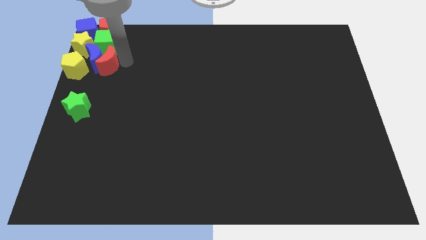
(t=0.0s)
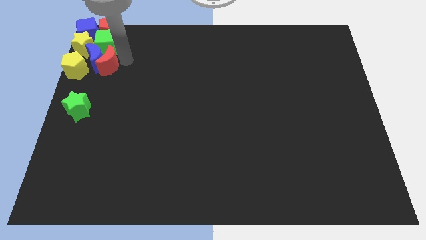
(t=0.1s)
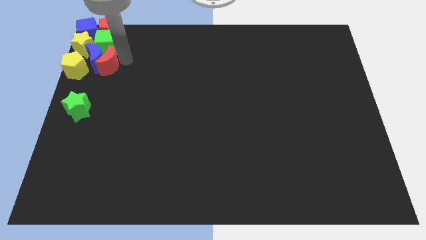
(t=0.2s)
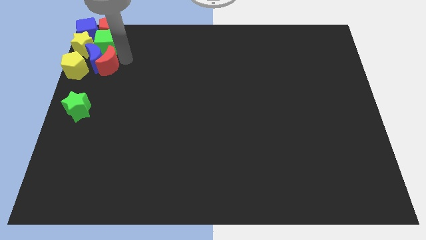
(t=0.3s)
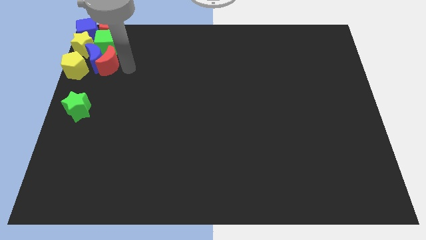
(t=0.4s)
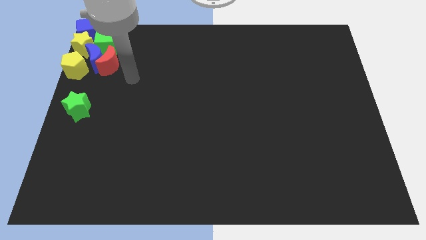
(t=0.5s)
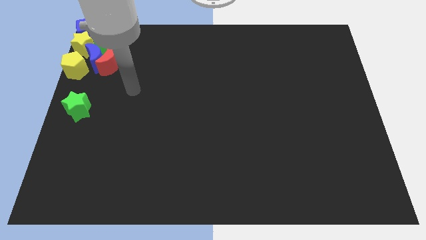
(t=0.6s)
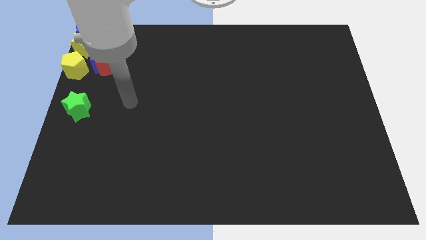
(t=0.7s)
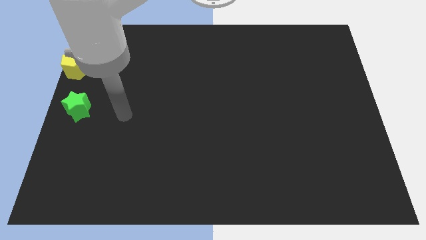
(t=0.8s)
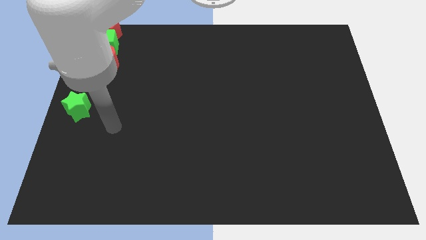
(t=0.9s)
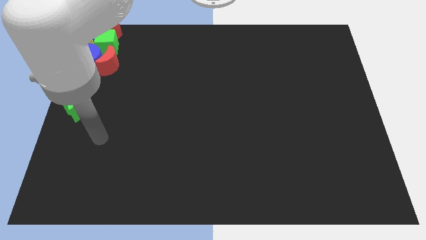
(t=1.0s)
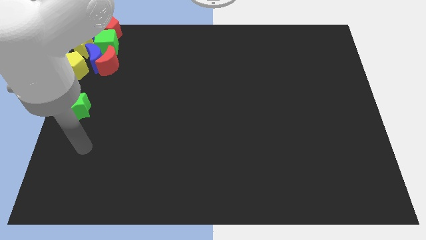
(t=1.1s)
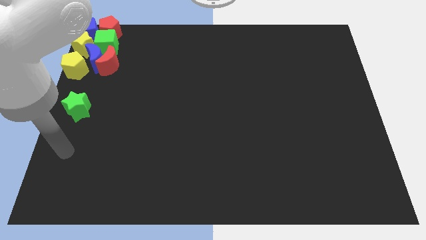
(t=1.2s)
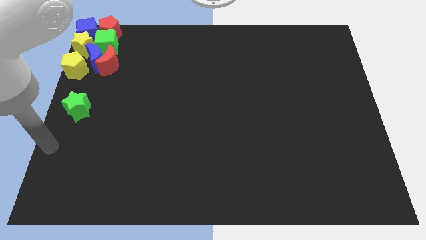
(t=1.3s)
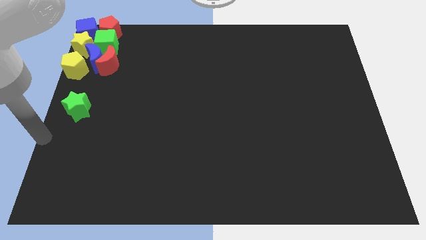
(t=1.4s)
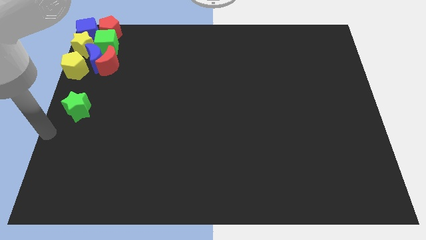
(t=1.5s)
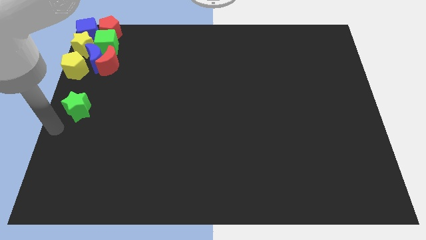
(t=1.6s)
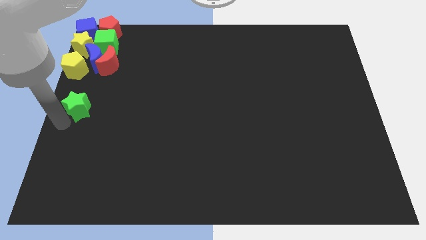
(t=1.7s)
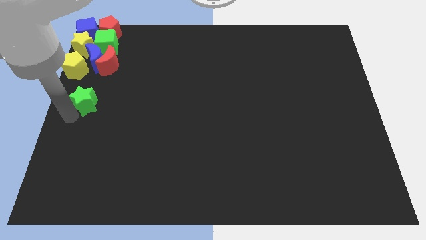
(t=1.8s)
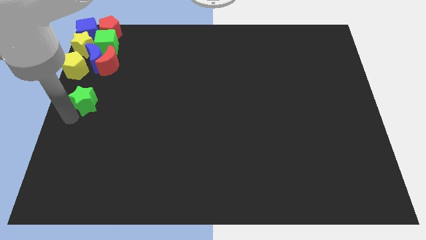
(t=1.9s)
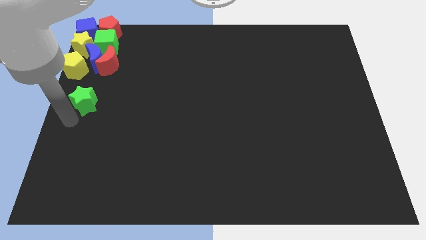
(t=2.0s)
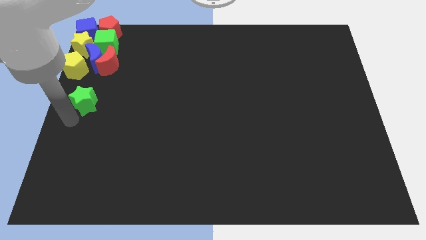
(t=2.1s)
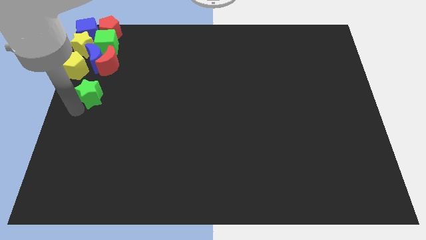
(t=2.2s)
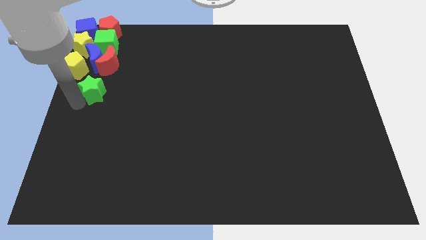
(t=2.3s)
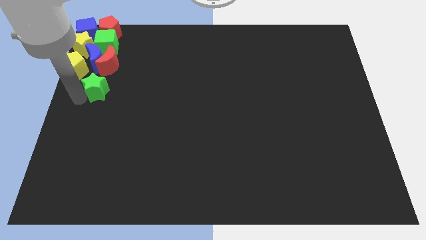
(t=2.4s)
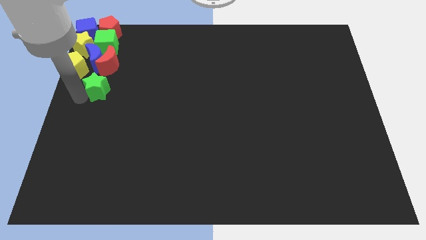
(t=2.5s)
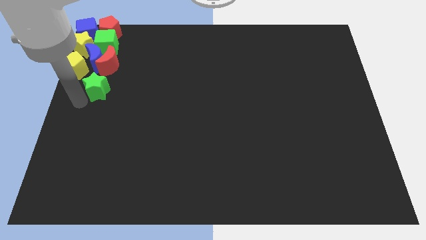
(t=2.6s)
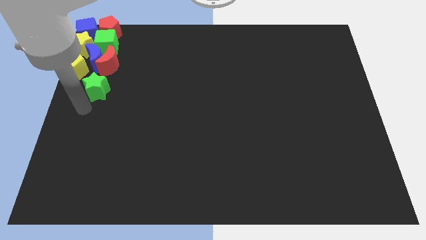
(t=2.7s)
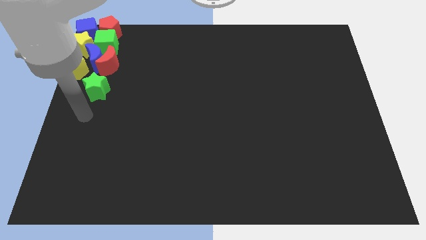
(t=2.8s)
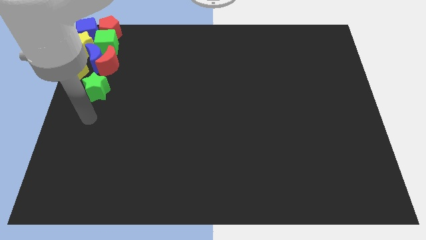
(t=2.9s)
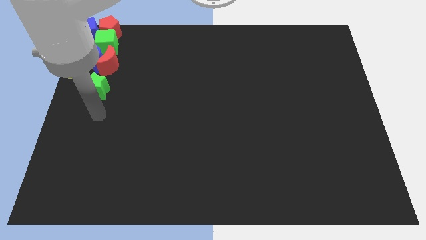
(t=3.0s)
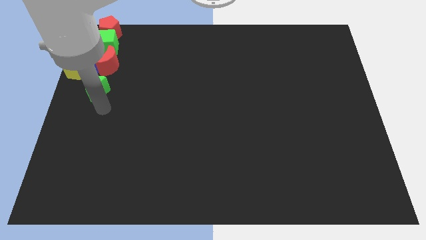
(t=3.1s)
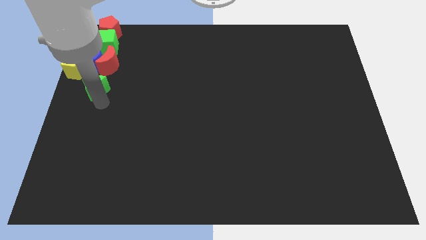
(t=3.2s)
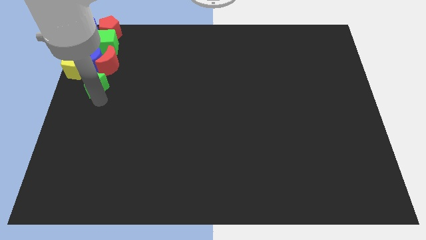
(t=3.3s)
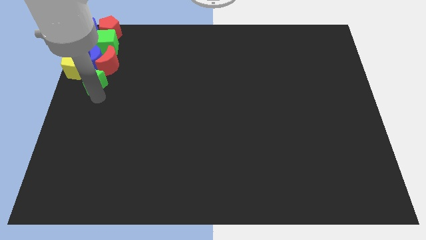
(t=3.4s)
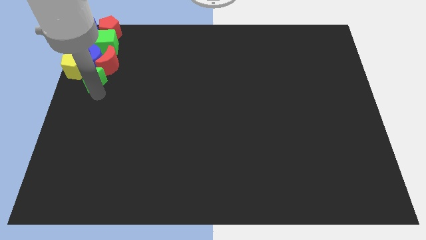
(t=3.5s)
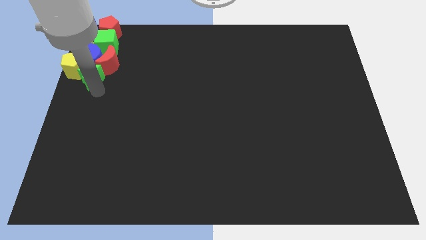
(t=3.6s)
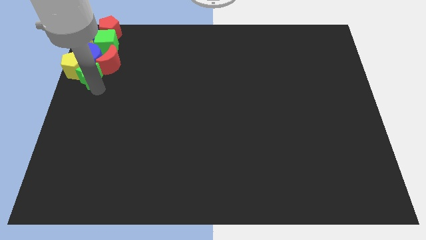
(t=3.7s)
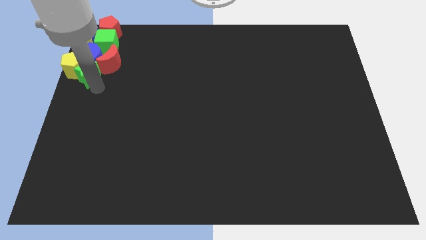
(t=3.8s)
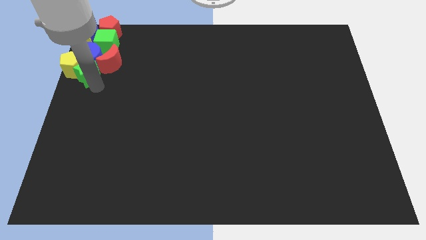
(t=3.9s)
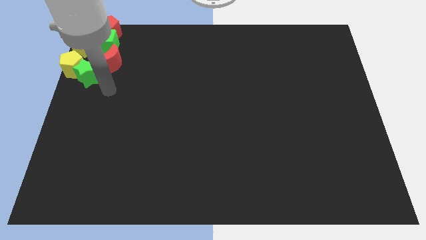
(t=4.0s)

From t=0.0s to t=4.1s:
move the green star into the group of blocks

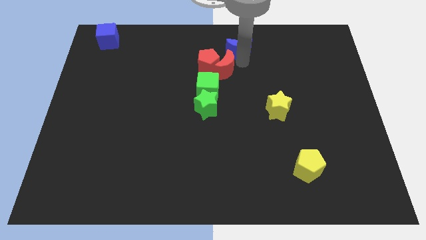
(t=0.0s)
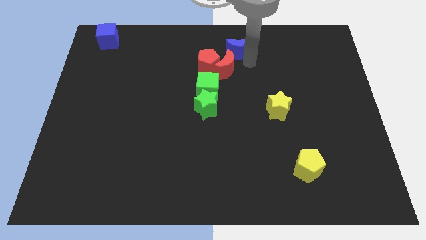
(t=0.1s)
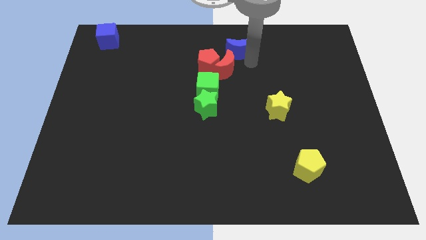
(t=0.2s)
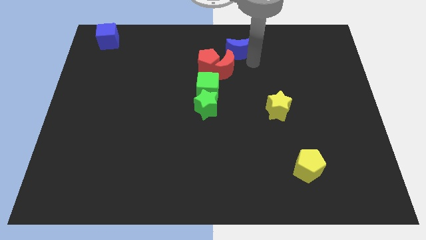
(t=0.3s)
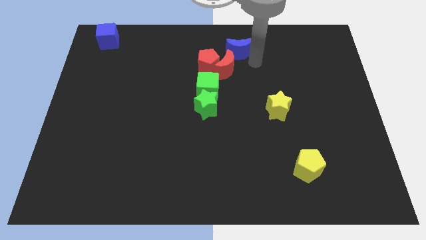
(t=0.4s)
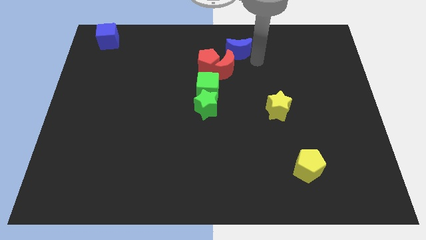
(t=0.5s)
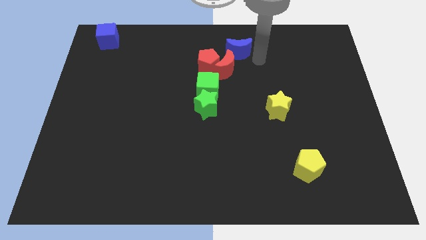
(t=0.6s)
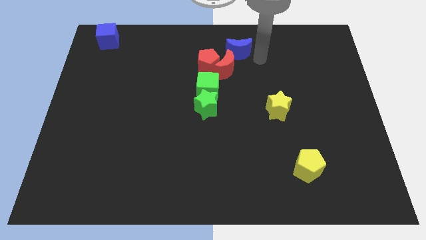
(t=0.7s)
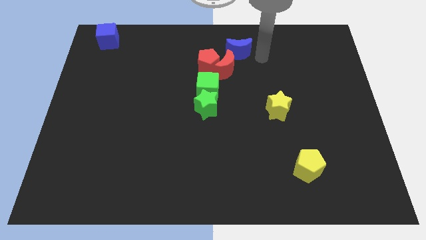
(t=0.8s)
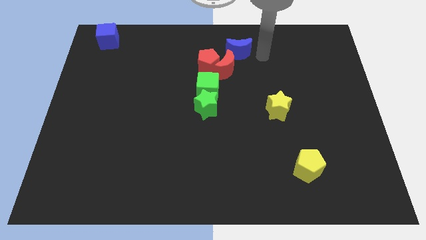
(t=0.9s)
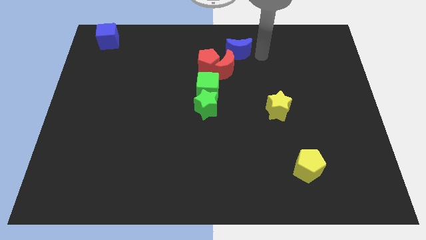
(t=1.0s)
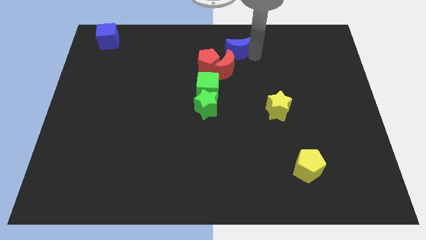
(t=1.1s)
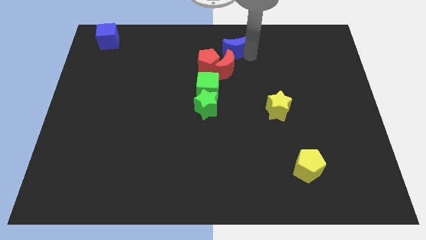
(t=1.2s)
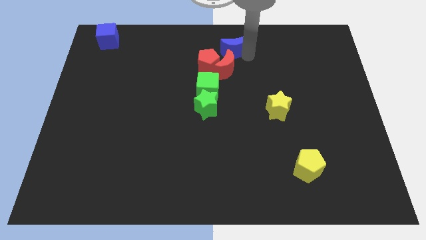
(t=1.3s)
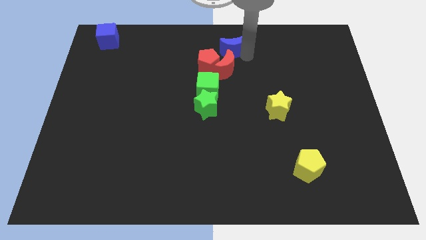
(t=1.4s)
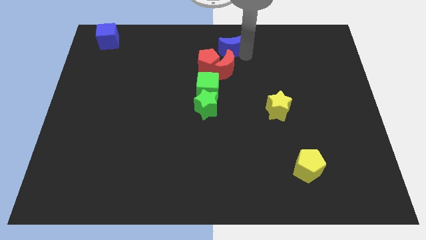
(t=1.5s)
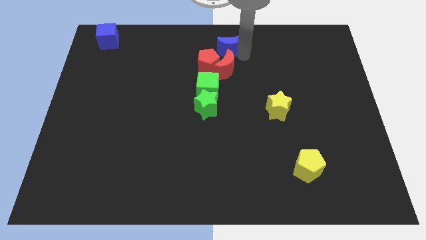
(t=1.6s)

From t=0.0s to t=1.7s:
put the blue moon above the red moon

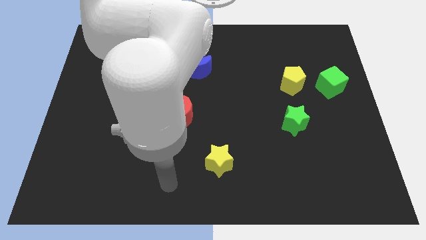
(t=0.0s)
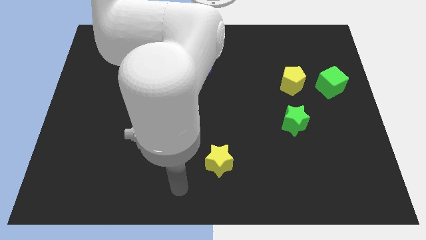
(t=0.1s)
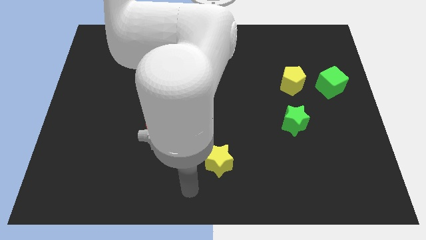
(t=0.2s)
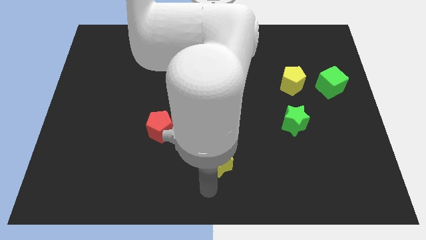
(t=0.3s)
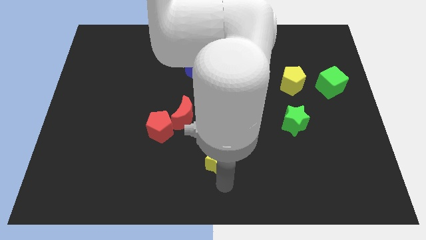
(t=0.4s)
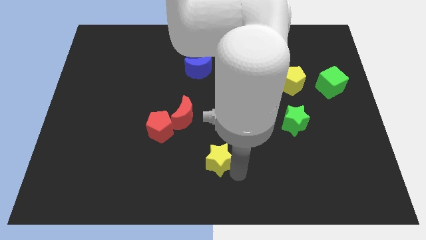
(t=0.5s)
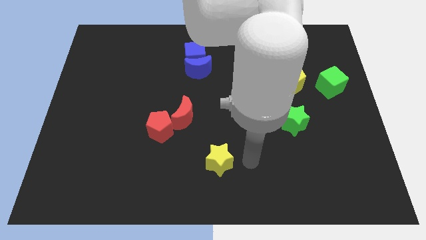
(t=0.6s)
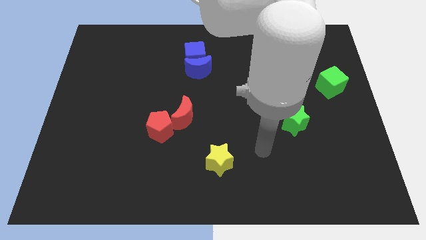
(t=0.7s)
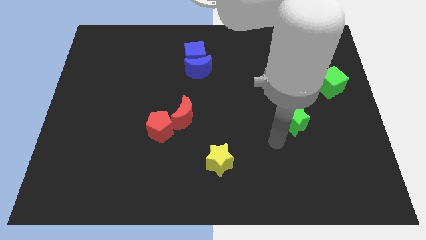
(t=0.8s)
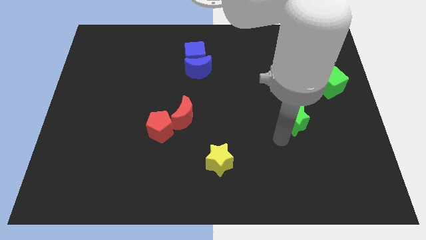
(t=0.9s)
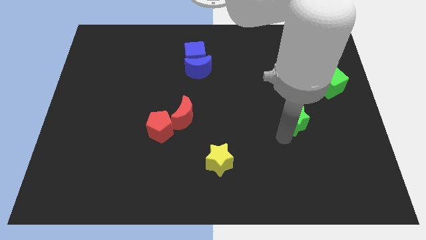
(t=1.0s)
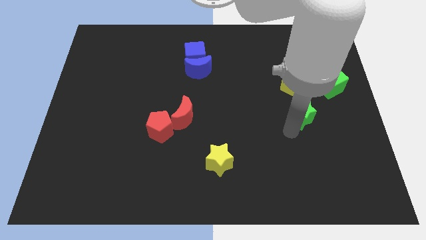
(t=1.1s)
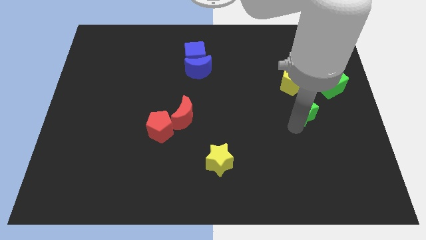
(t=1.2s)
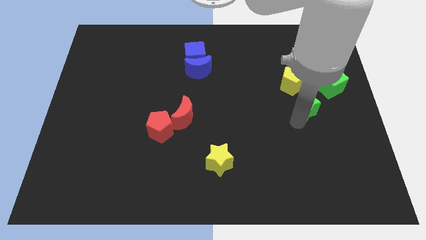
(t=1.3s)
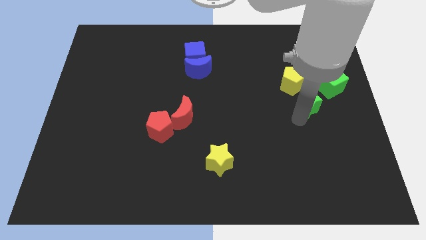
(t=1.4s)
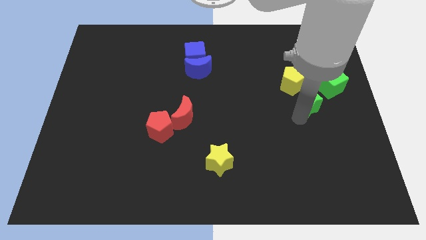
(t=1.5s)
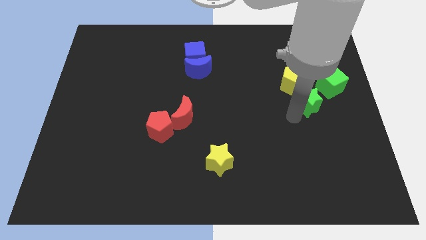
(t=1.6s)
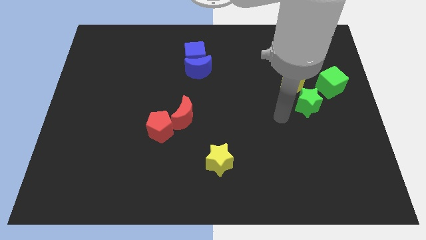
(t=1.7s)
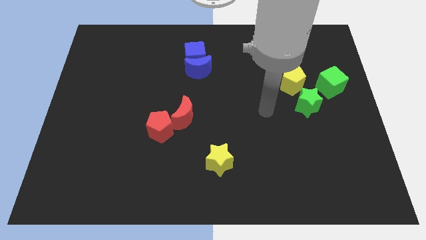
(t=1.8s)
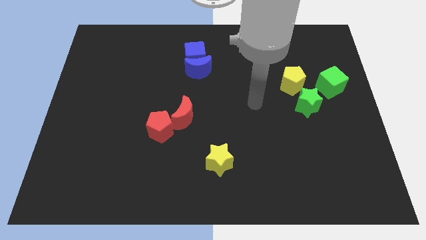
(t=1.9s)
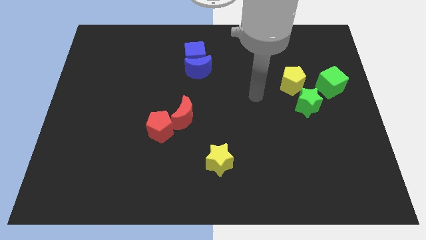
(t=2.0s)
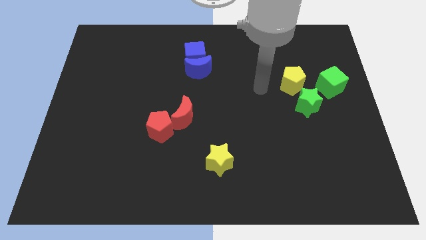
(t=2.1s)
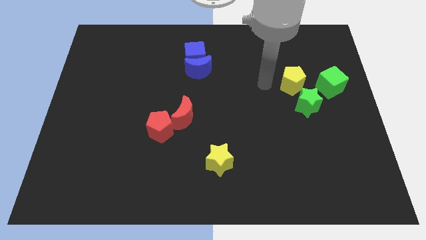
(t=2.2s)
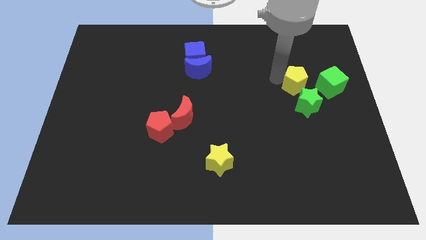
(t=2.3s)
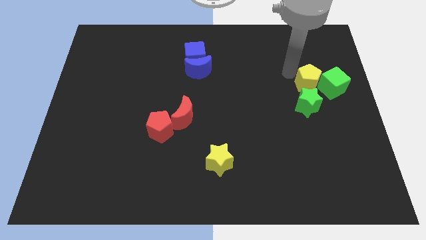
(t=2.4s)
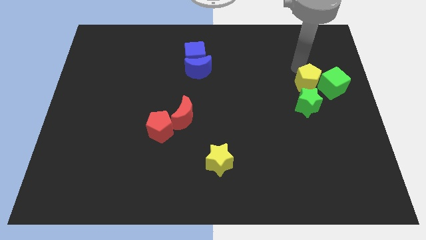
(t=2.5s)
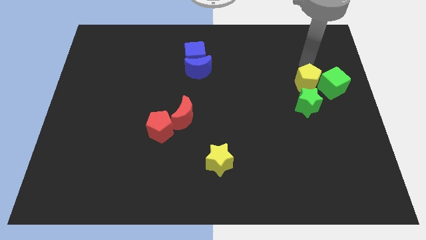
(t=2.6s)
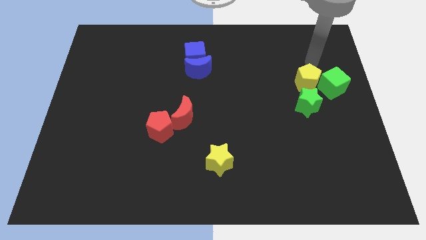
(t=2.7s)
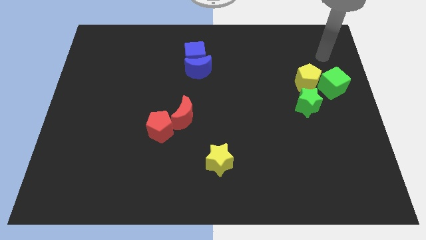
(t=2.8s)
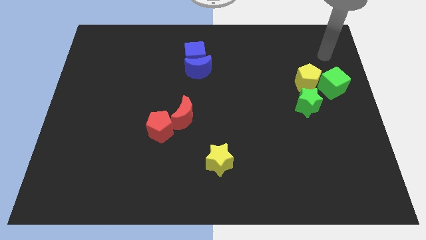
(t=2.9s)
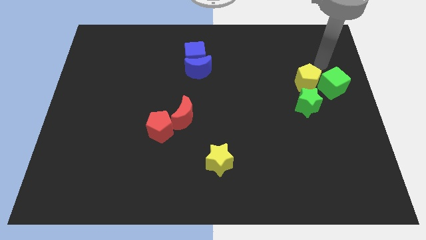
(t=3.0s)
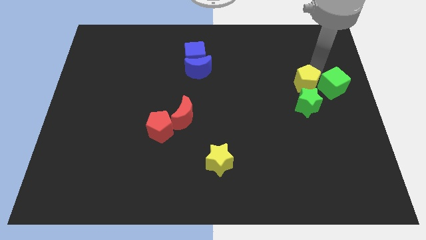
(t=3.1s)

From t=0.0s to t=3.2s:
place yellow pentagon above green star
